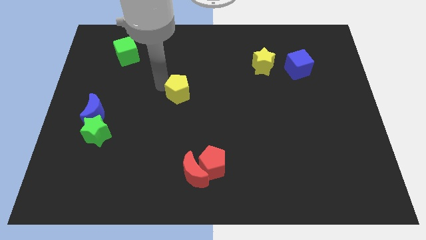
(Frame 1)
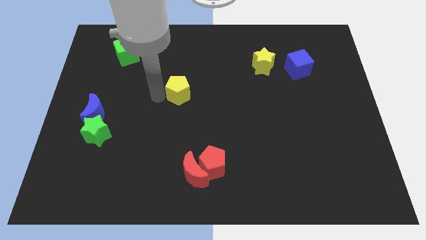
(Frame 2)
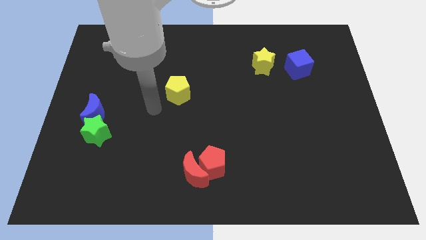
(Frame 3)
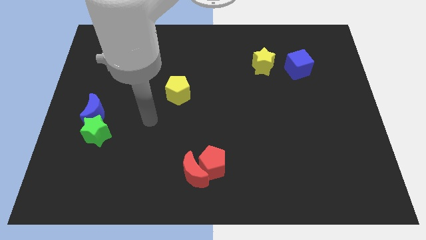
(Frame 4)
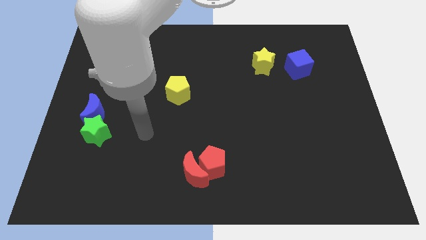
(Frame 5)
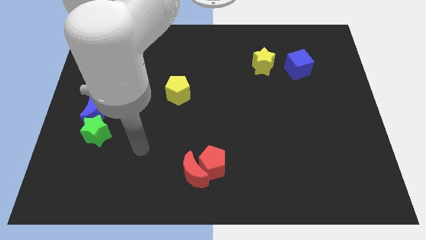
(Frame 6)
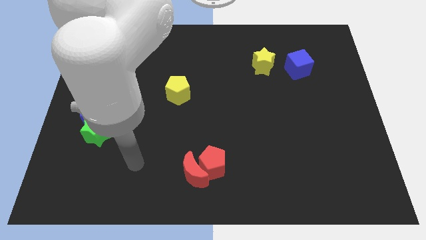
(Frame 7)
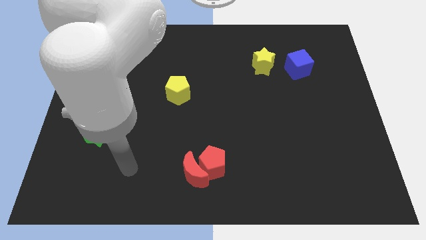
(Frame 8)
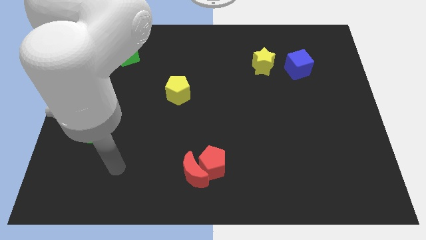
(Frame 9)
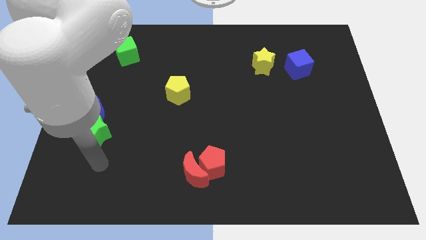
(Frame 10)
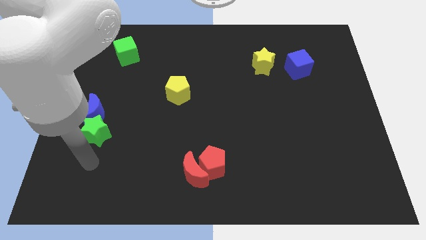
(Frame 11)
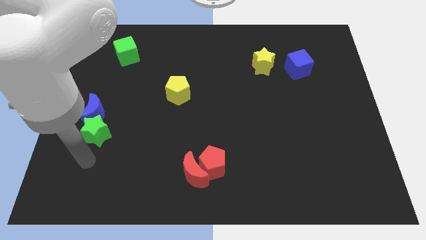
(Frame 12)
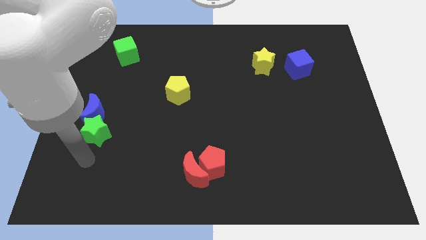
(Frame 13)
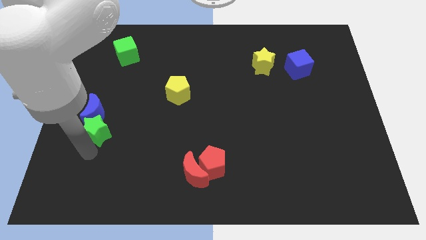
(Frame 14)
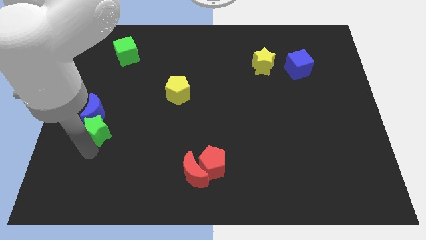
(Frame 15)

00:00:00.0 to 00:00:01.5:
place your arm to the bottom of green star

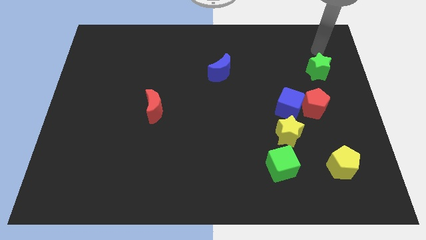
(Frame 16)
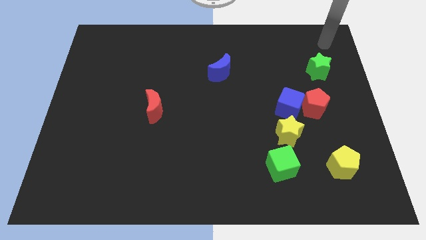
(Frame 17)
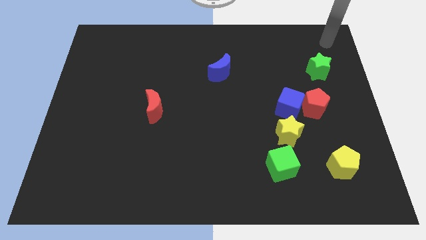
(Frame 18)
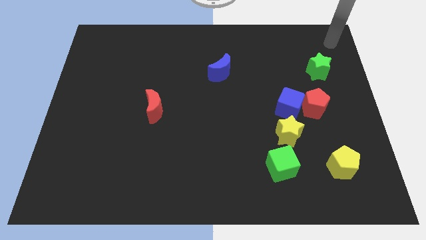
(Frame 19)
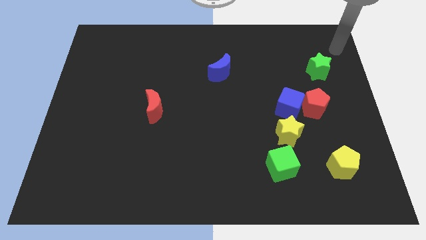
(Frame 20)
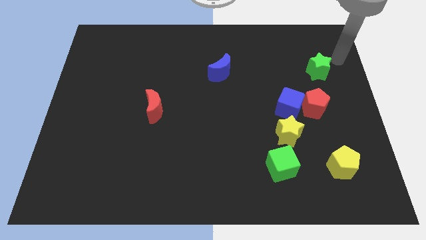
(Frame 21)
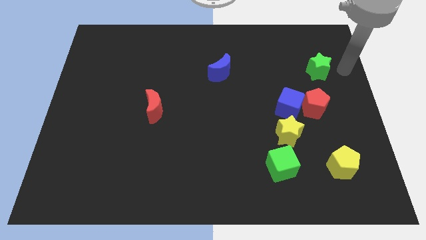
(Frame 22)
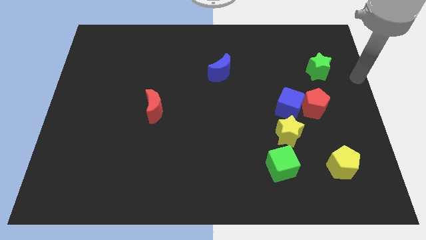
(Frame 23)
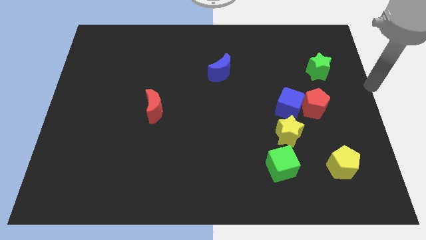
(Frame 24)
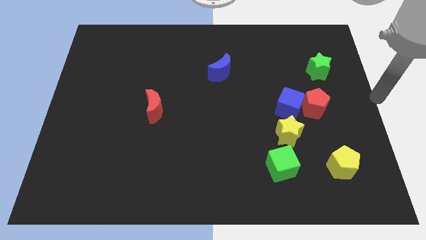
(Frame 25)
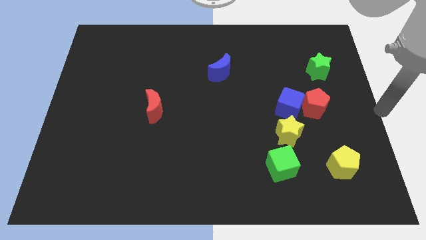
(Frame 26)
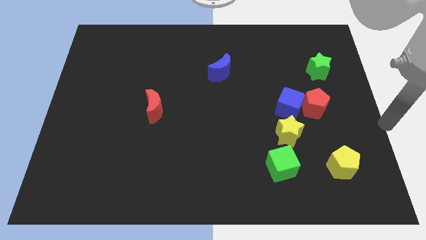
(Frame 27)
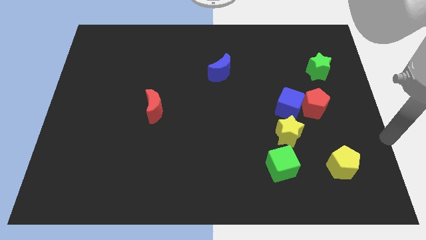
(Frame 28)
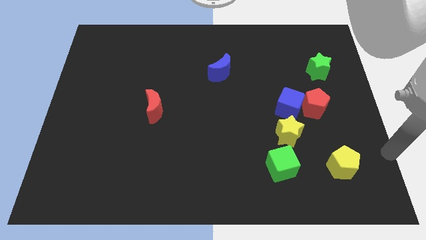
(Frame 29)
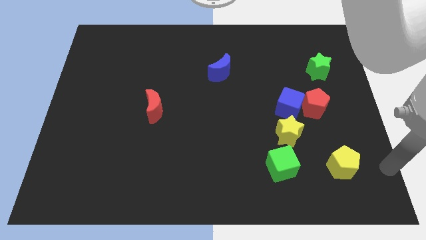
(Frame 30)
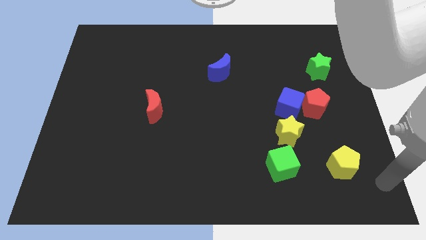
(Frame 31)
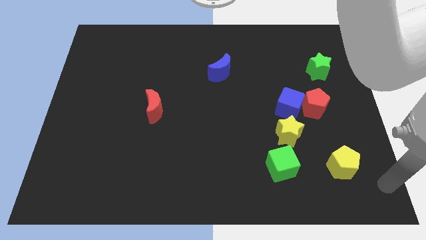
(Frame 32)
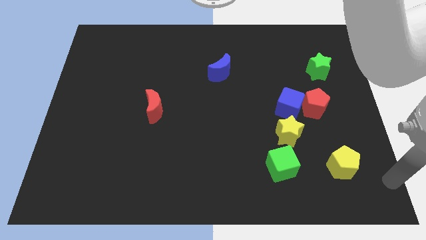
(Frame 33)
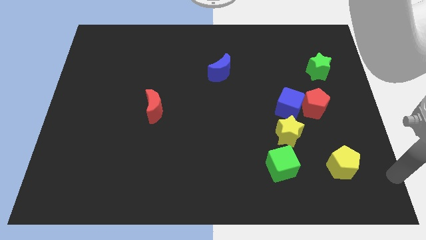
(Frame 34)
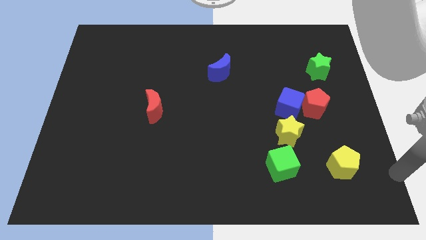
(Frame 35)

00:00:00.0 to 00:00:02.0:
move arm to the right end of the board

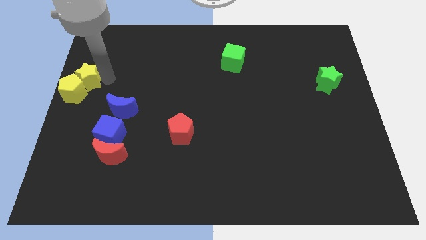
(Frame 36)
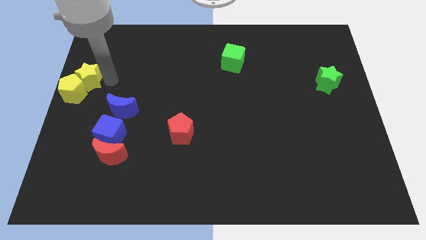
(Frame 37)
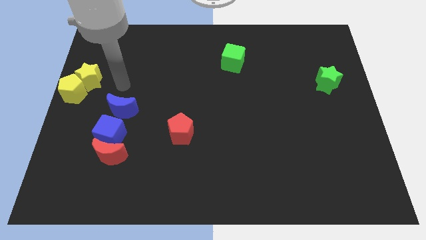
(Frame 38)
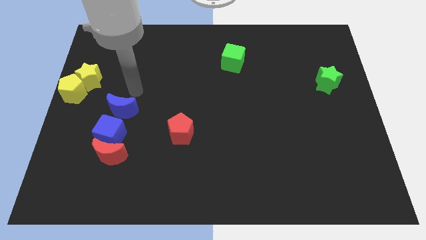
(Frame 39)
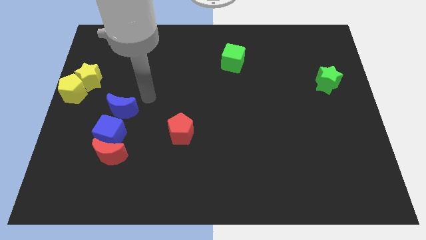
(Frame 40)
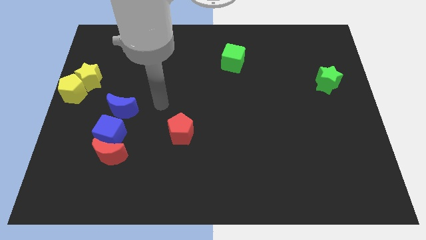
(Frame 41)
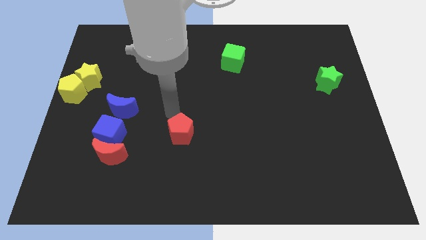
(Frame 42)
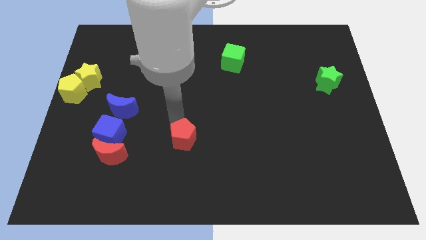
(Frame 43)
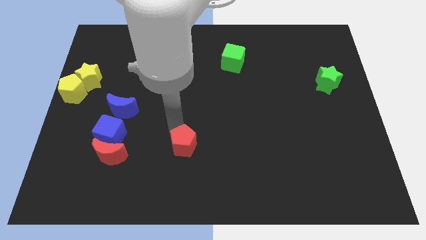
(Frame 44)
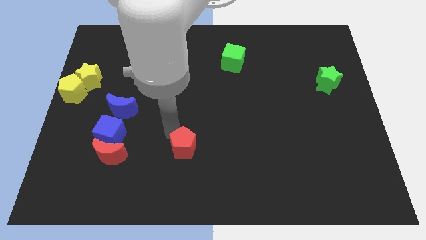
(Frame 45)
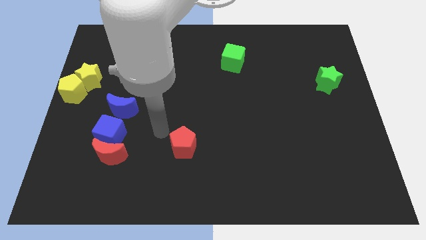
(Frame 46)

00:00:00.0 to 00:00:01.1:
slightly move the red pentagon towards down

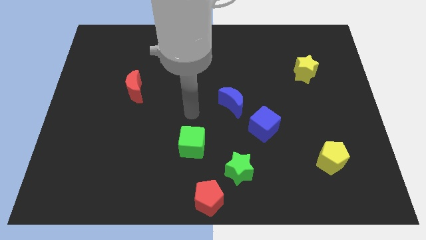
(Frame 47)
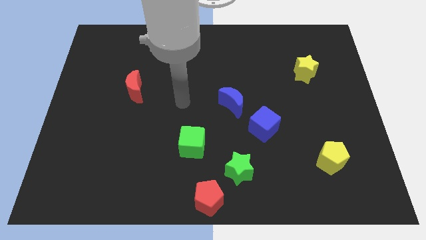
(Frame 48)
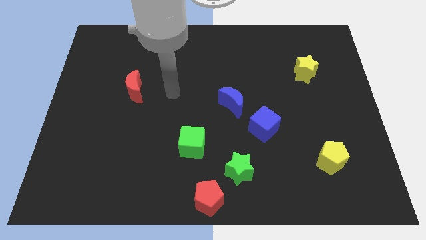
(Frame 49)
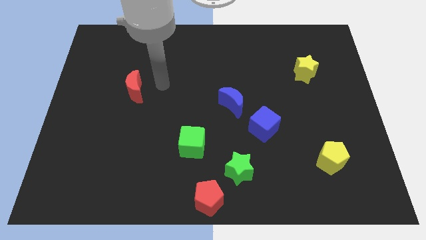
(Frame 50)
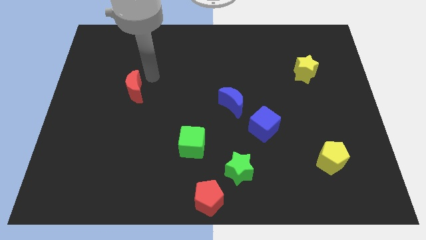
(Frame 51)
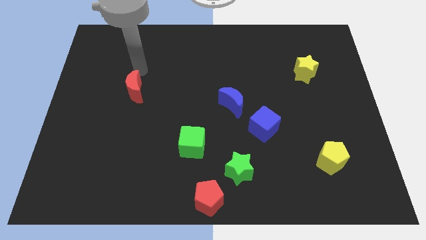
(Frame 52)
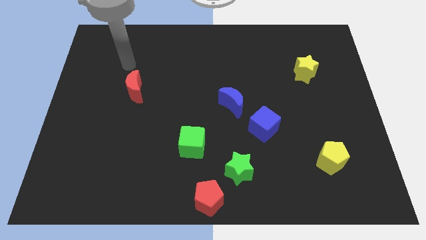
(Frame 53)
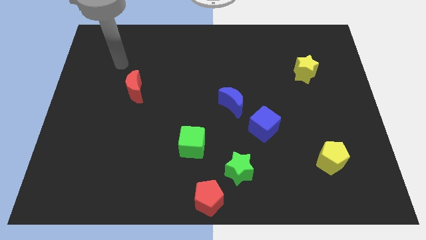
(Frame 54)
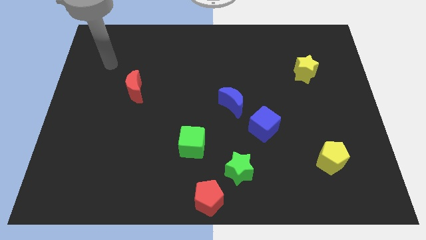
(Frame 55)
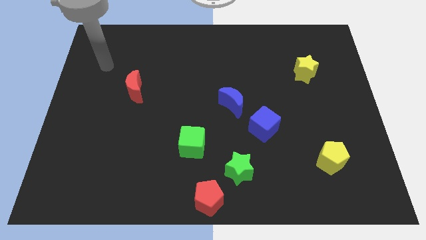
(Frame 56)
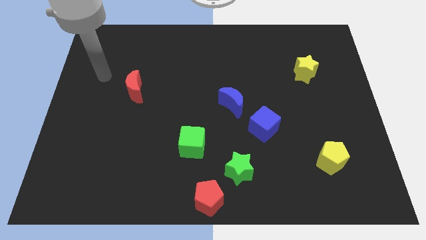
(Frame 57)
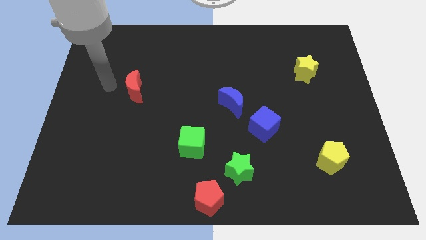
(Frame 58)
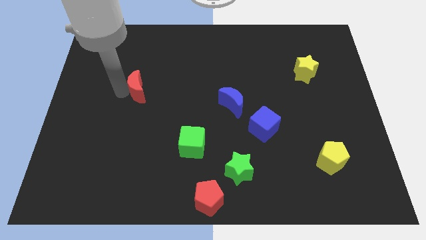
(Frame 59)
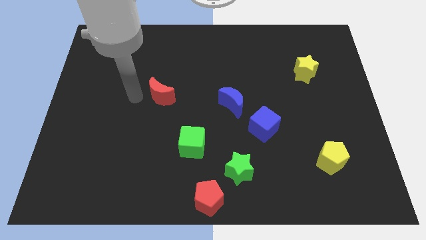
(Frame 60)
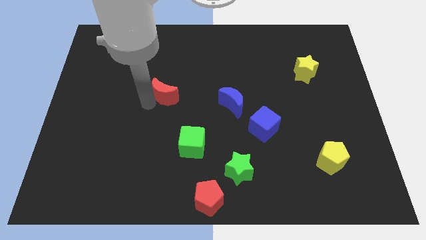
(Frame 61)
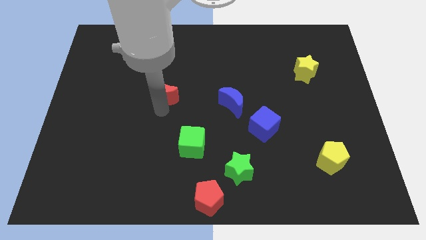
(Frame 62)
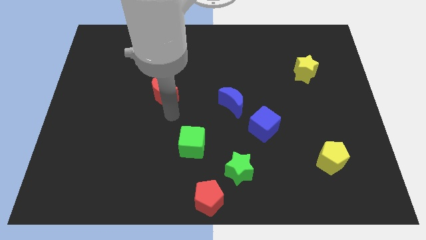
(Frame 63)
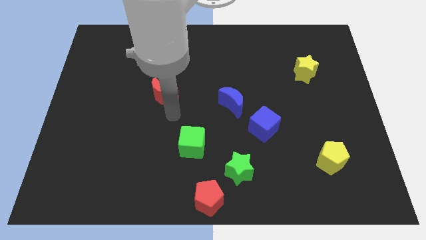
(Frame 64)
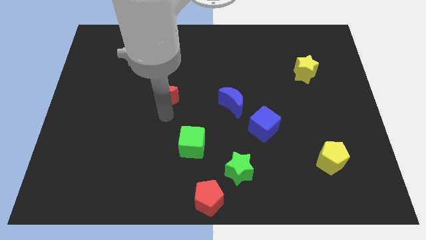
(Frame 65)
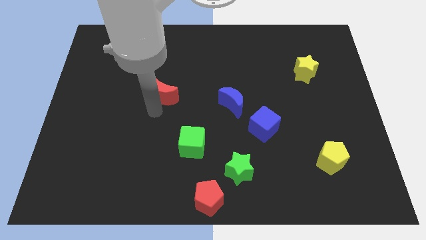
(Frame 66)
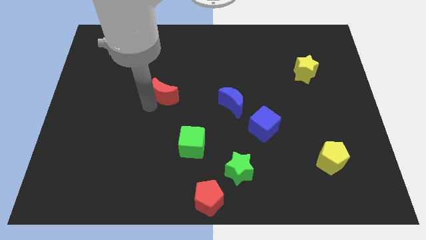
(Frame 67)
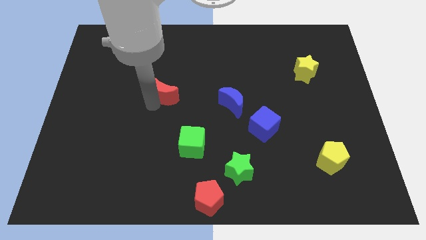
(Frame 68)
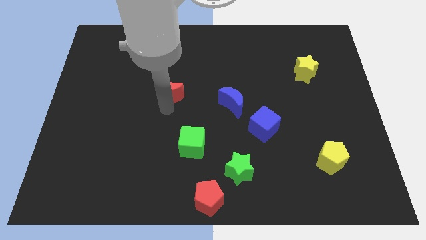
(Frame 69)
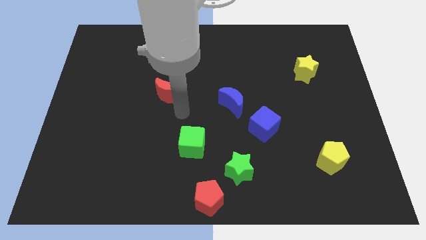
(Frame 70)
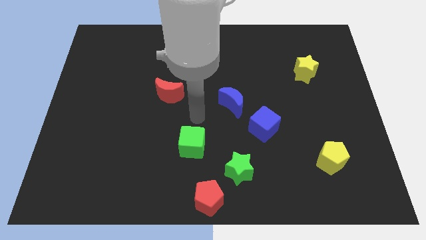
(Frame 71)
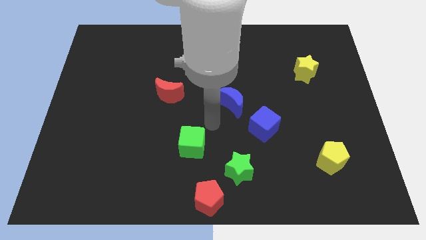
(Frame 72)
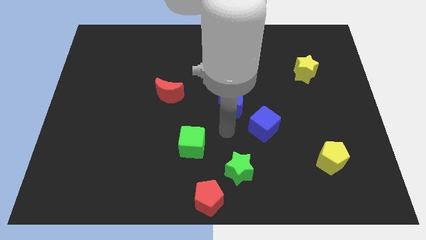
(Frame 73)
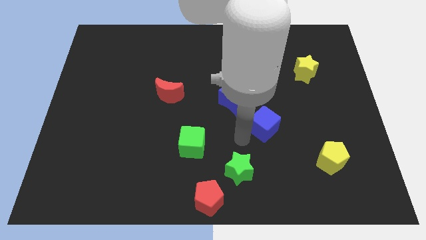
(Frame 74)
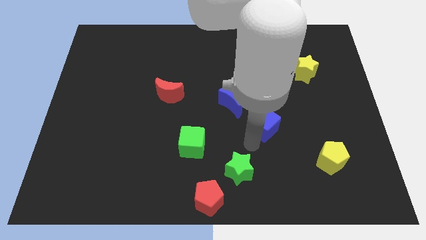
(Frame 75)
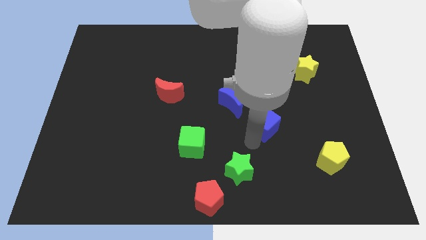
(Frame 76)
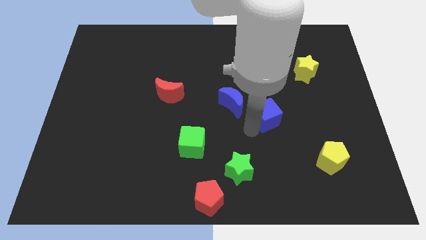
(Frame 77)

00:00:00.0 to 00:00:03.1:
slide red moon and blue cube slightly upward

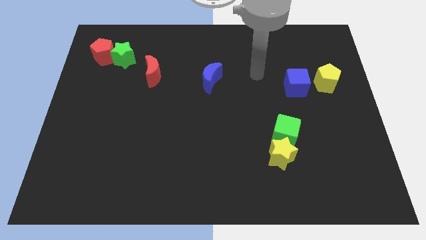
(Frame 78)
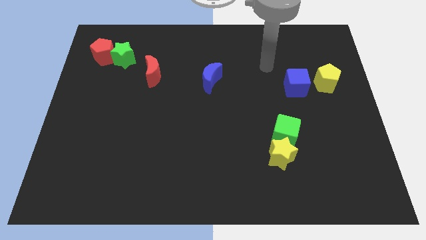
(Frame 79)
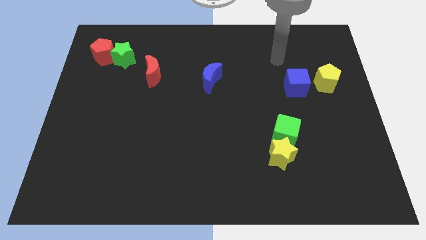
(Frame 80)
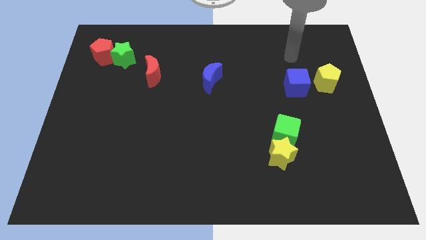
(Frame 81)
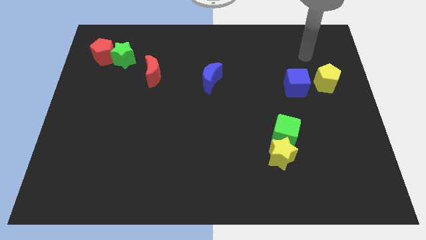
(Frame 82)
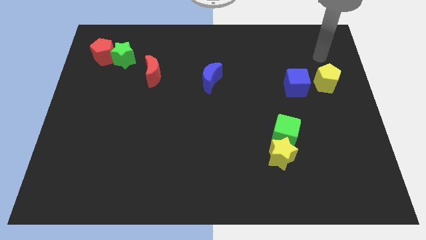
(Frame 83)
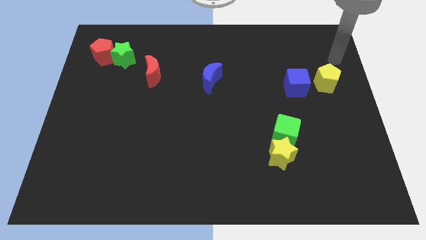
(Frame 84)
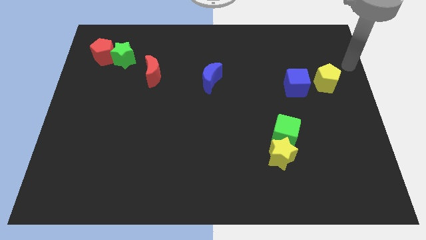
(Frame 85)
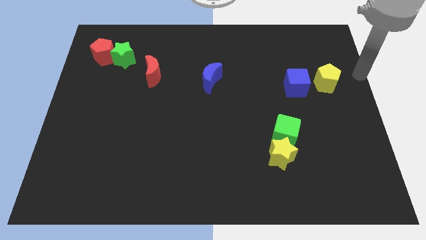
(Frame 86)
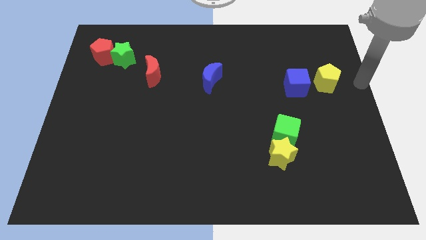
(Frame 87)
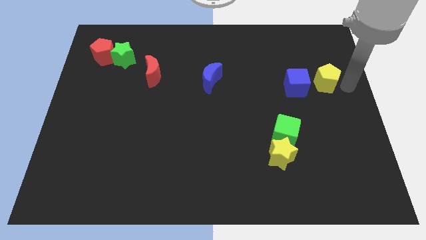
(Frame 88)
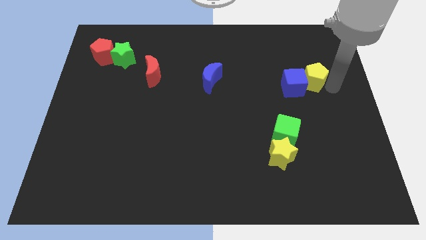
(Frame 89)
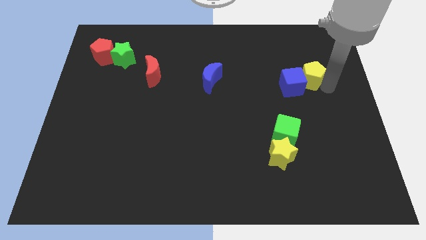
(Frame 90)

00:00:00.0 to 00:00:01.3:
push the yellow pentagon into the blue cube

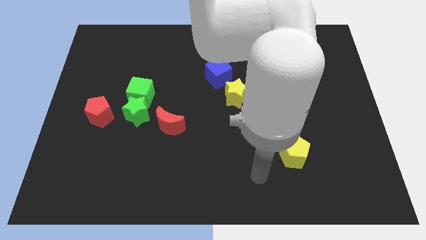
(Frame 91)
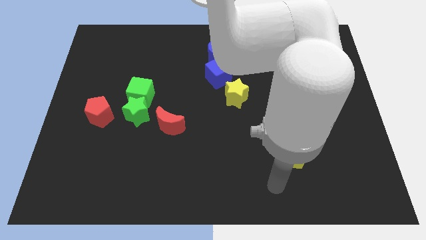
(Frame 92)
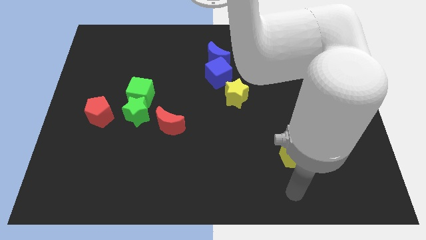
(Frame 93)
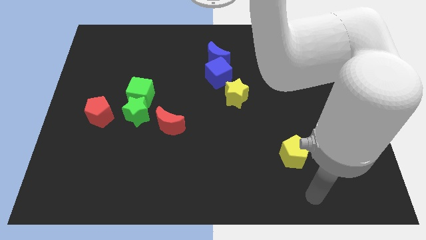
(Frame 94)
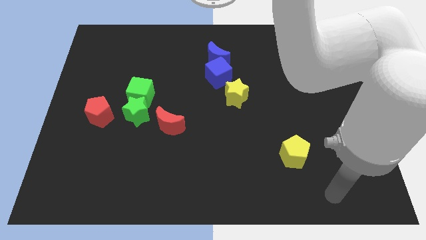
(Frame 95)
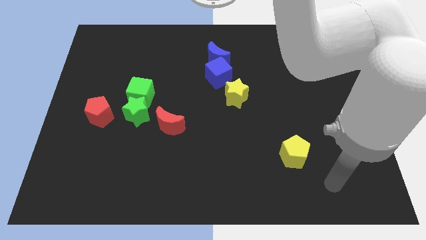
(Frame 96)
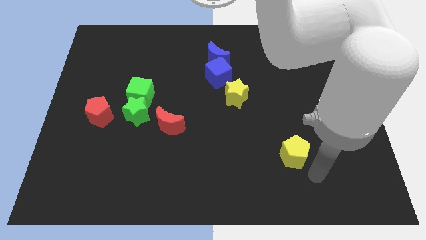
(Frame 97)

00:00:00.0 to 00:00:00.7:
point your arm at the bottom right side of yellow pentagon
